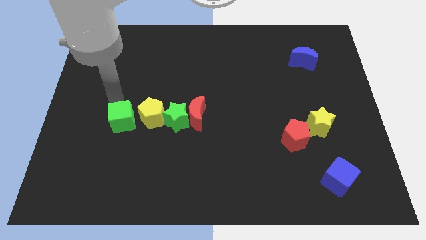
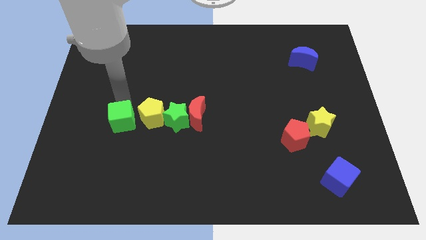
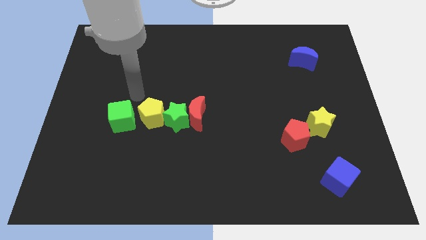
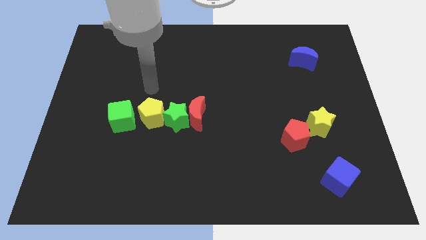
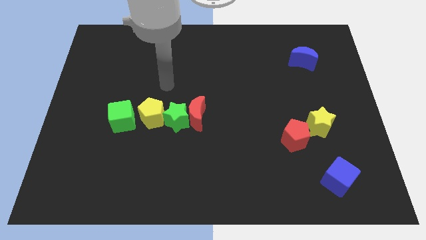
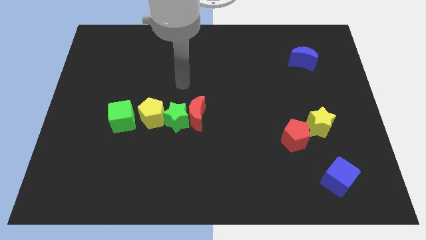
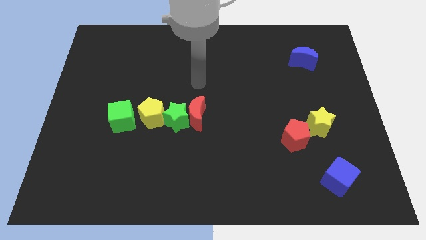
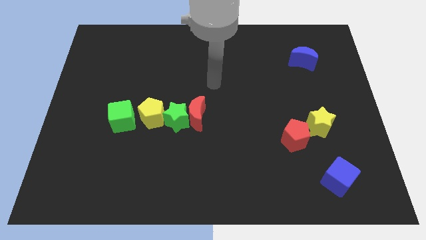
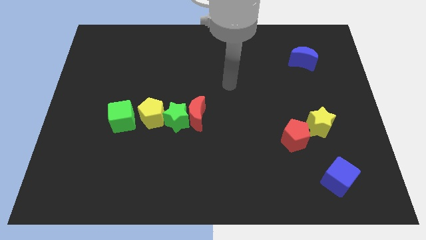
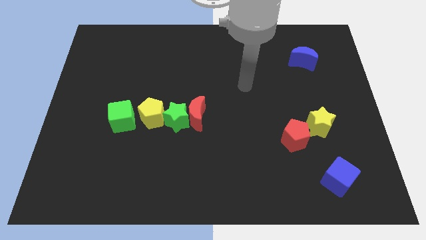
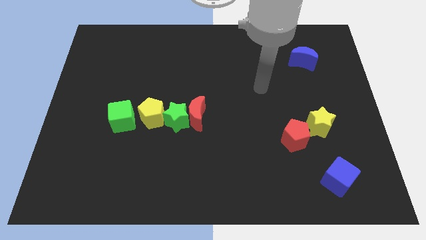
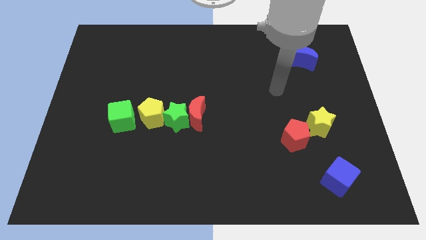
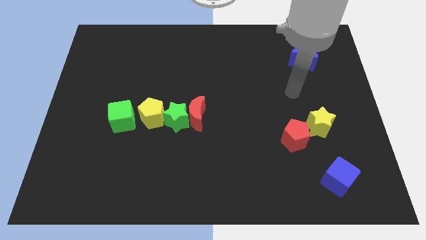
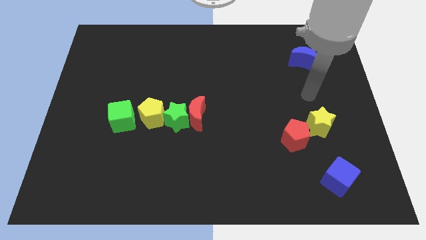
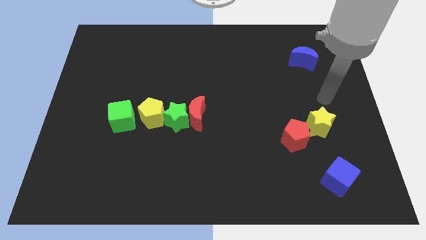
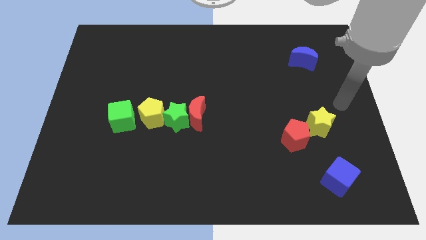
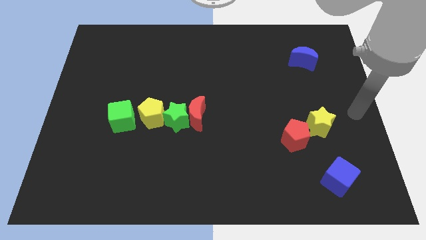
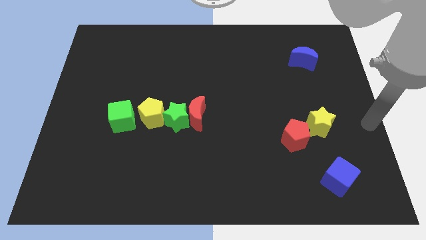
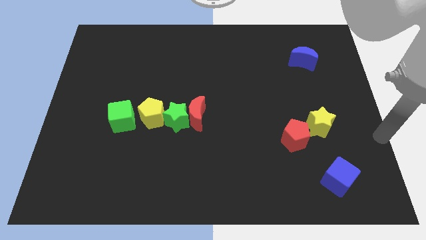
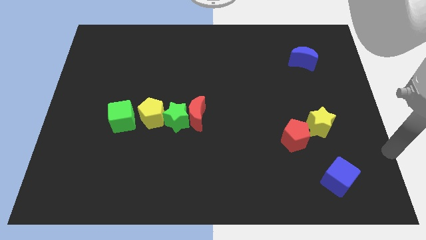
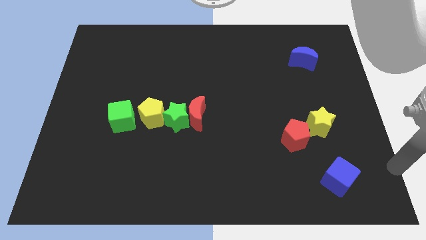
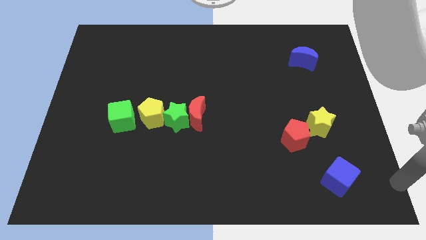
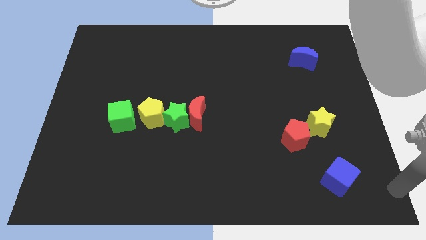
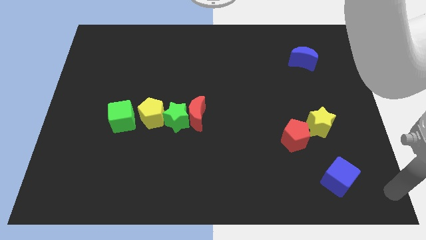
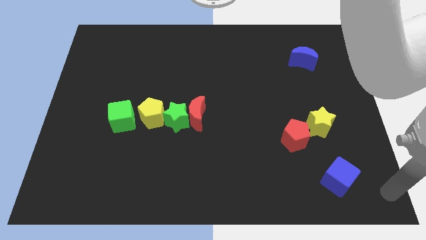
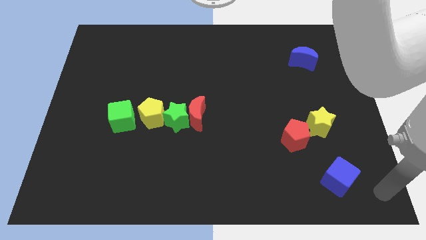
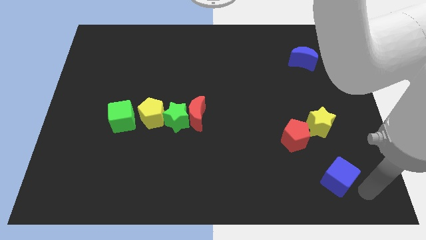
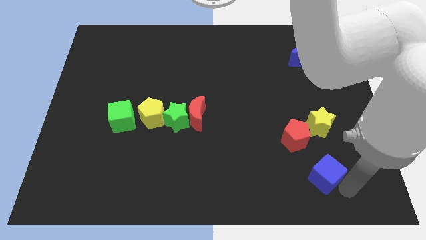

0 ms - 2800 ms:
move your arm from the green cube to the blue cube

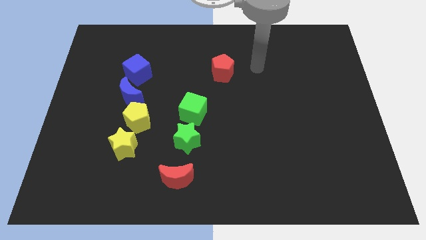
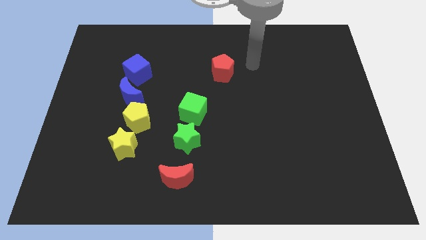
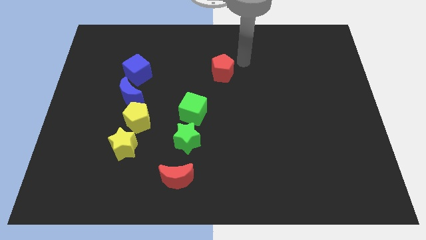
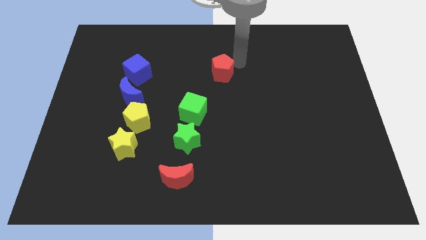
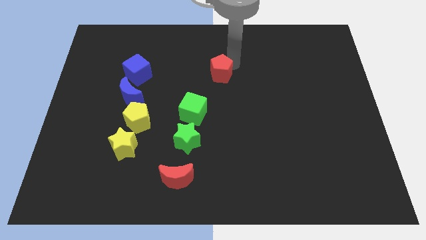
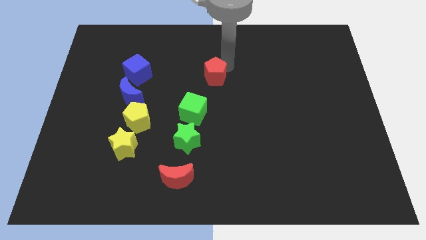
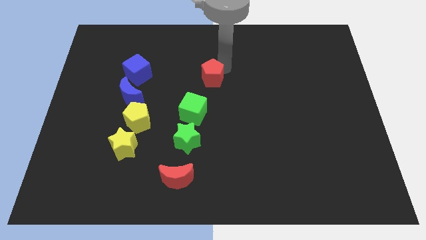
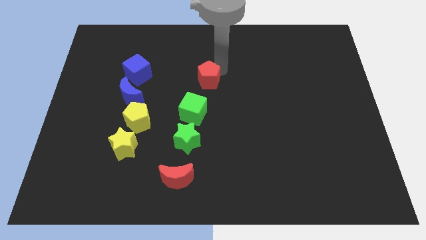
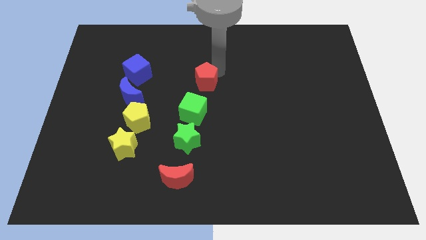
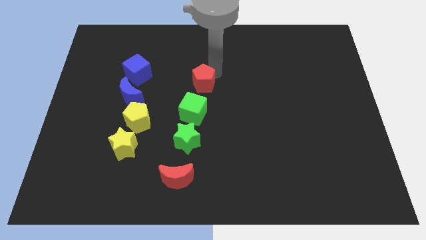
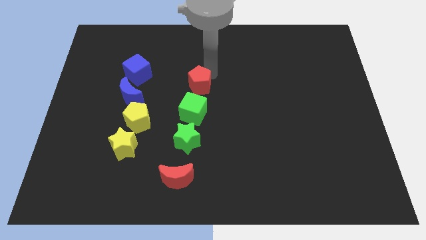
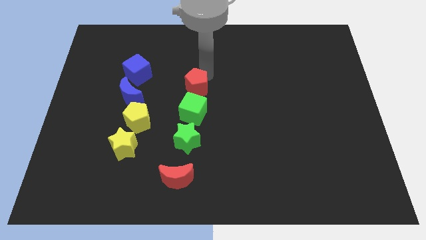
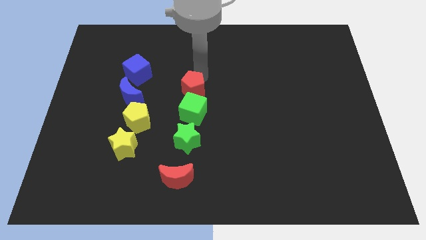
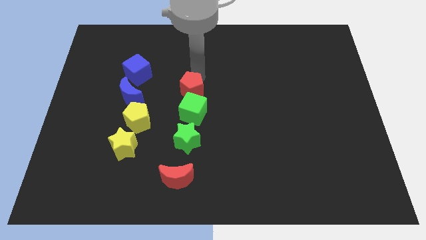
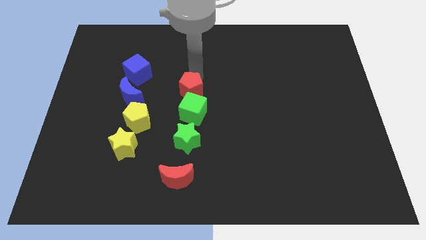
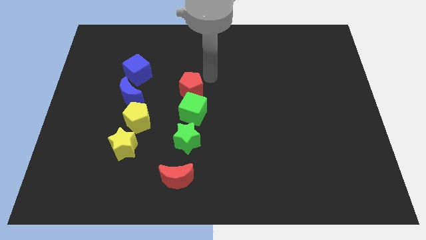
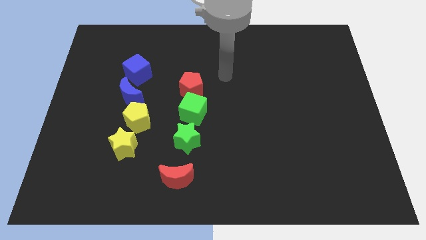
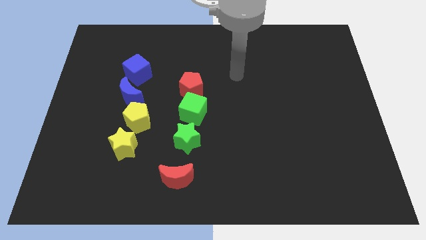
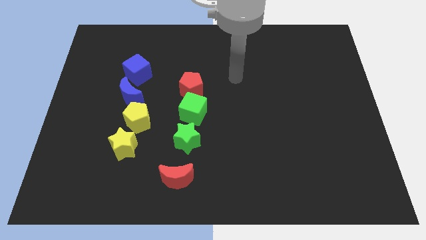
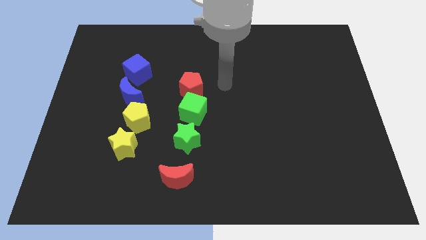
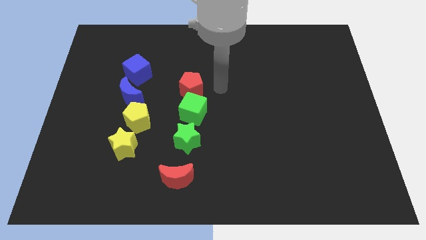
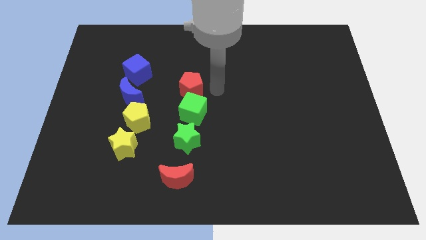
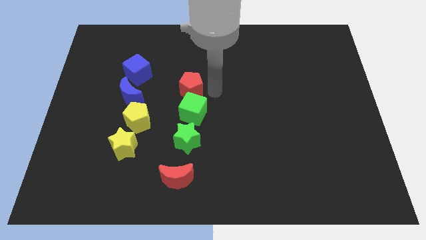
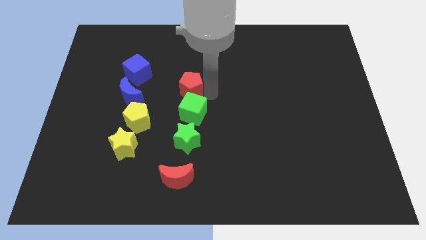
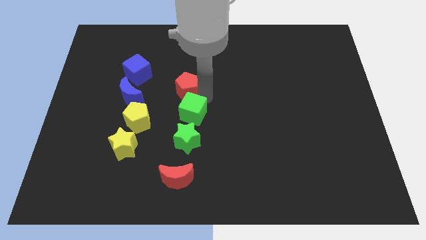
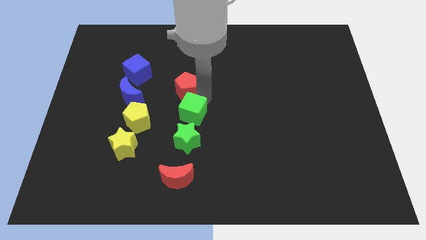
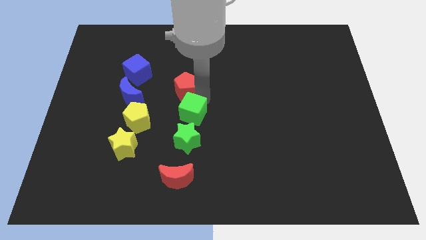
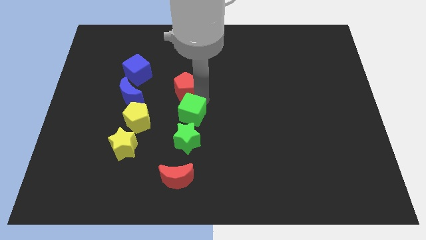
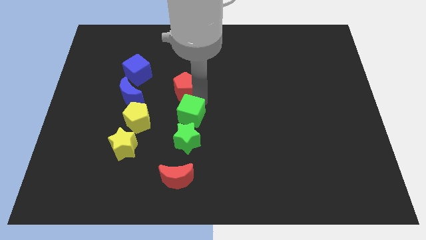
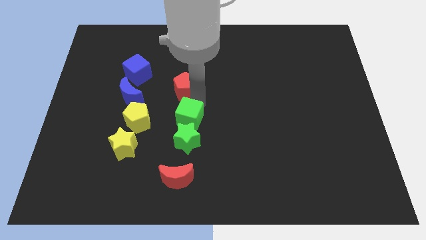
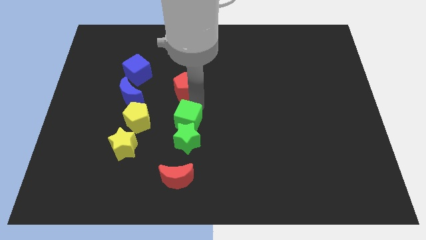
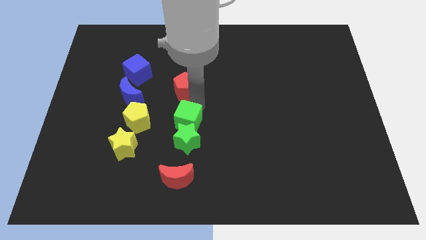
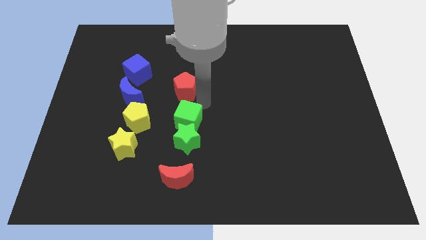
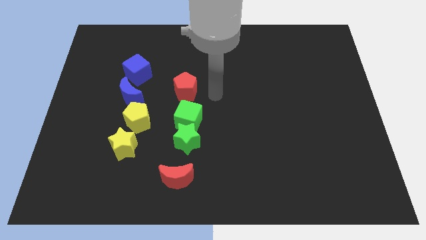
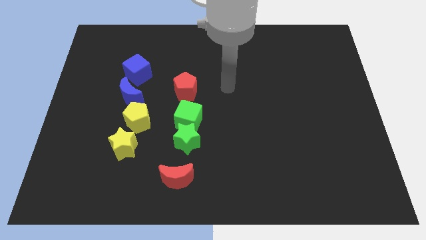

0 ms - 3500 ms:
place the red pentagon above the green cube

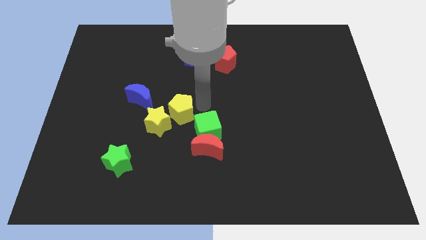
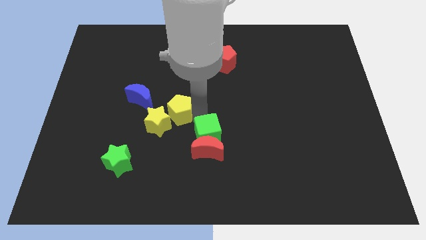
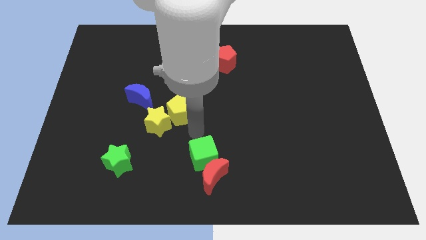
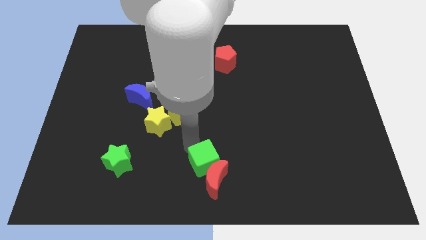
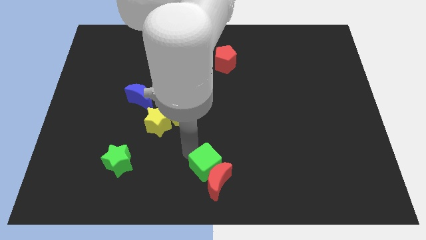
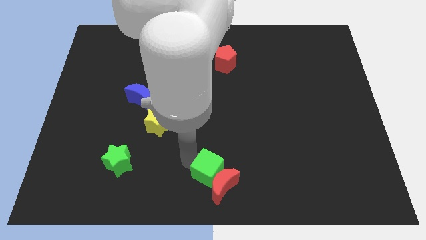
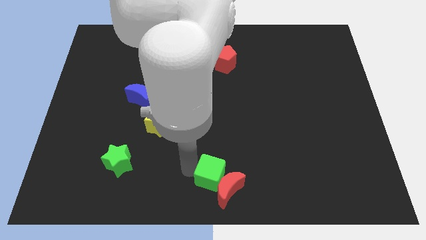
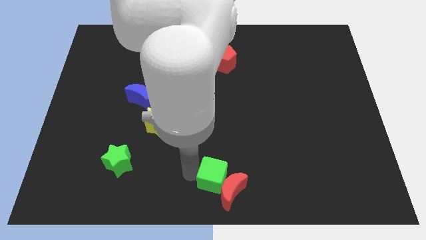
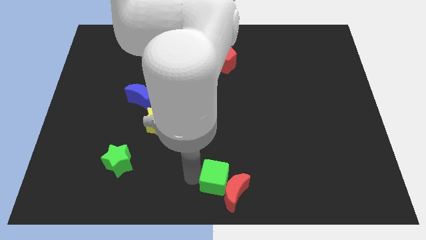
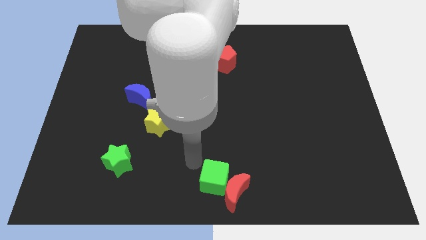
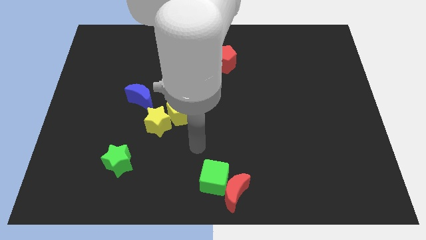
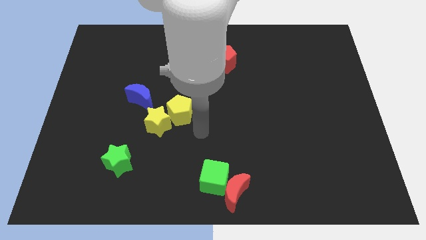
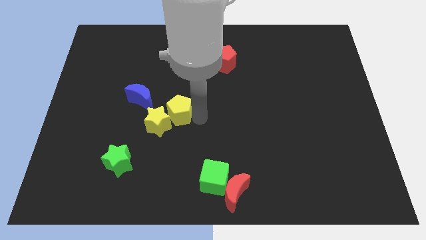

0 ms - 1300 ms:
push the green cube and red moon towards the bottom center of the board

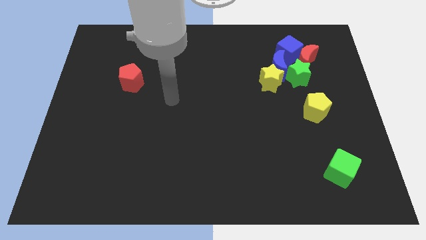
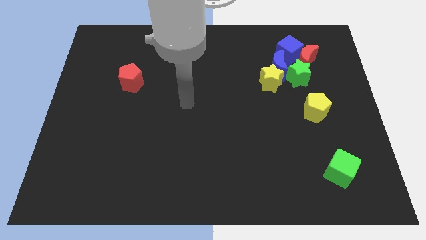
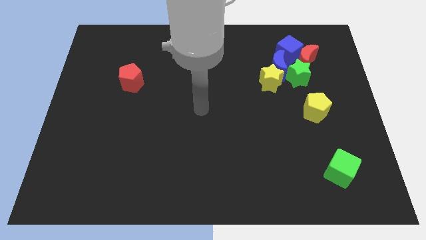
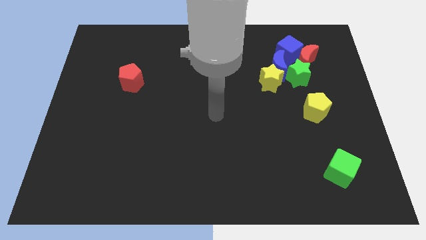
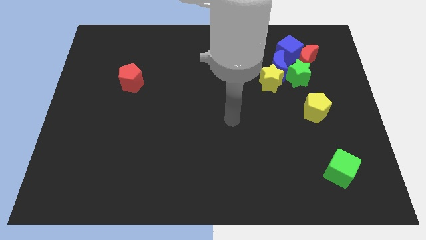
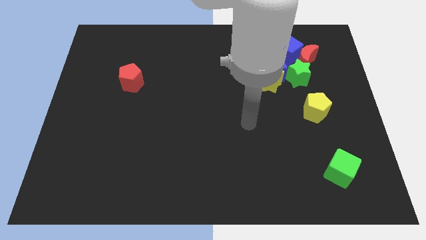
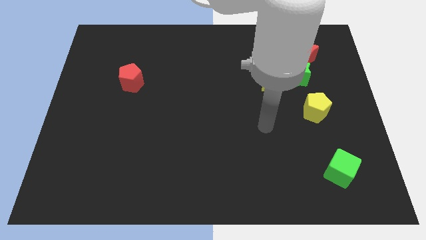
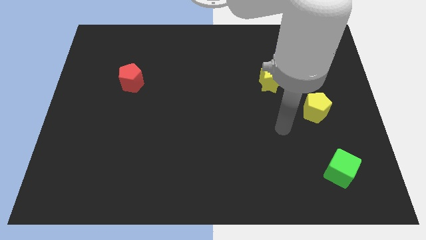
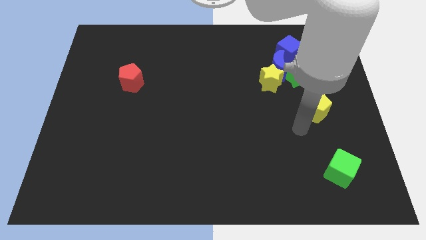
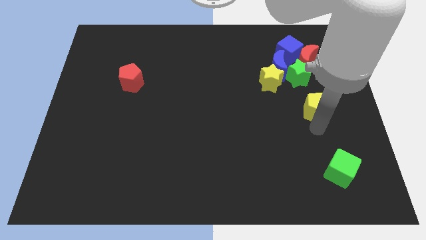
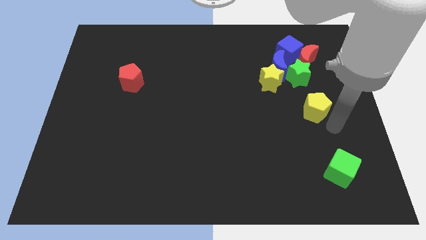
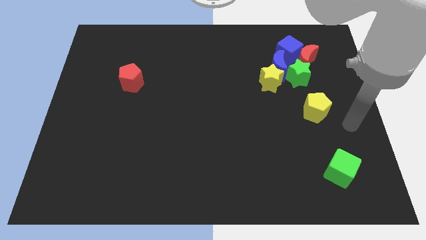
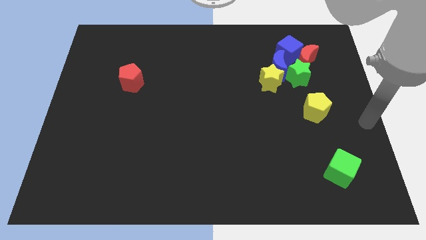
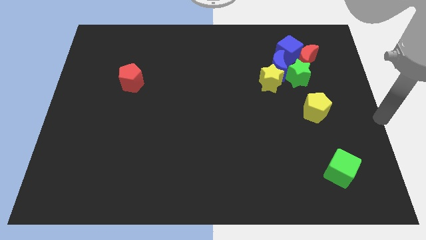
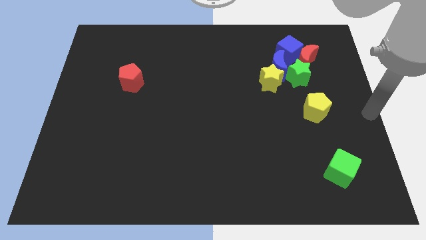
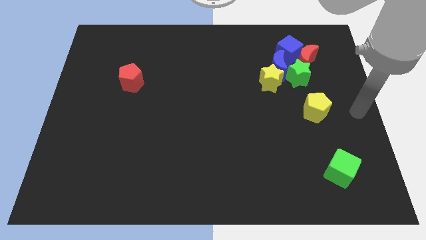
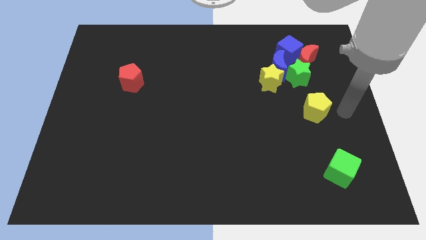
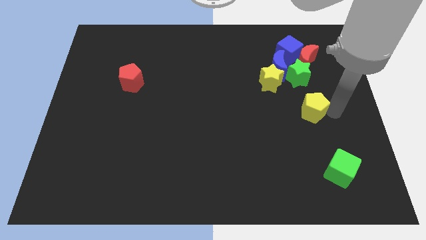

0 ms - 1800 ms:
move your arm towards the yellow pentagon
